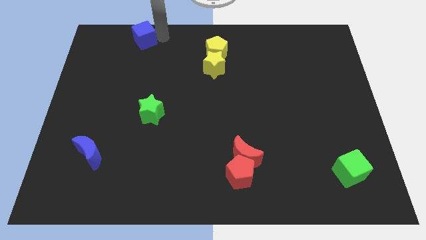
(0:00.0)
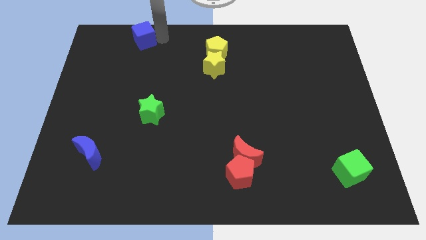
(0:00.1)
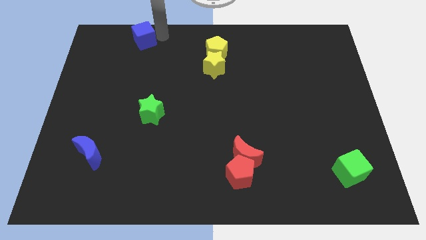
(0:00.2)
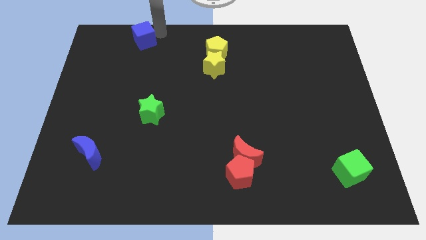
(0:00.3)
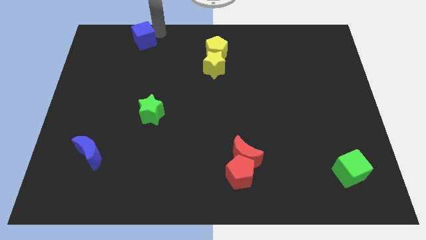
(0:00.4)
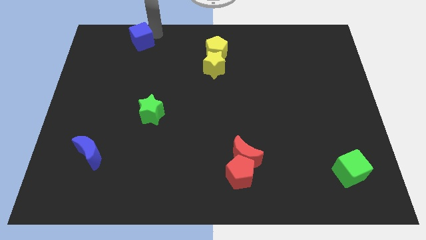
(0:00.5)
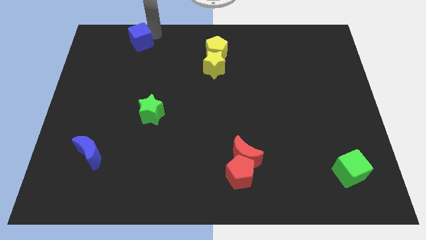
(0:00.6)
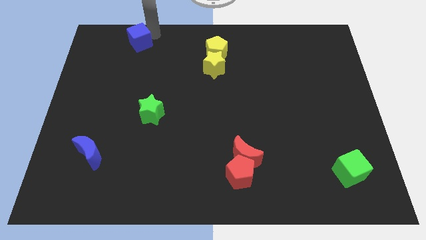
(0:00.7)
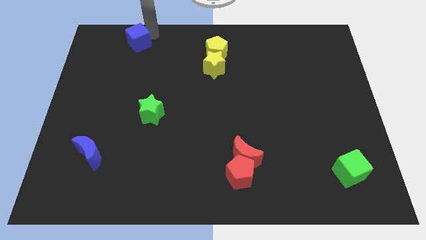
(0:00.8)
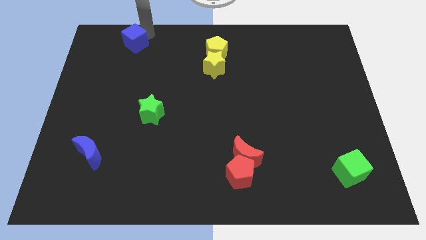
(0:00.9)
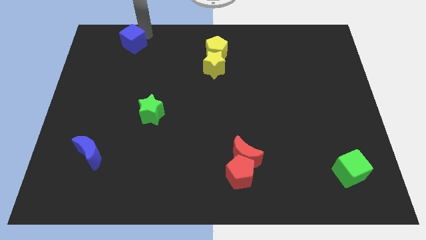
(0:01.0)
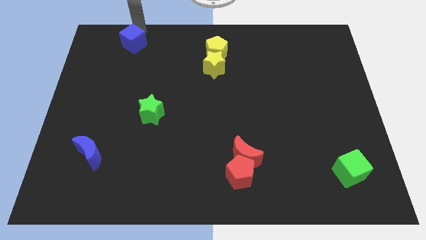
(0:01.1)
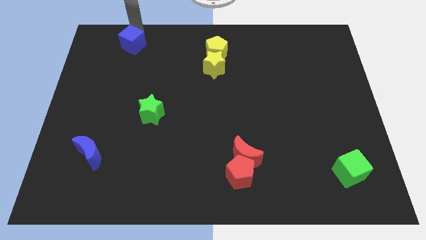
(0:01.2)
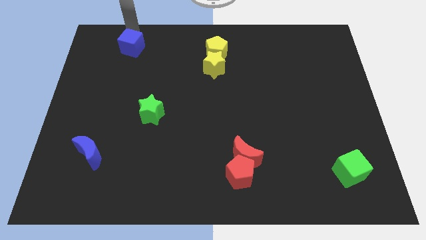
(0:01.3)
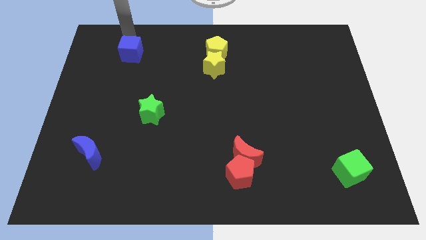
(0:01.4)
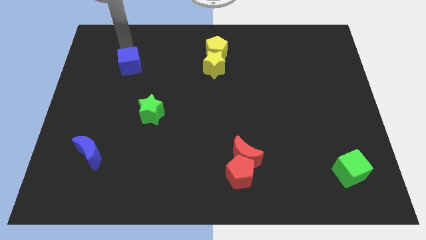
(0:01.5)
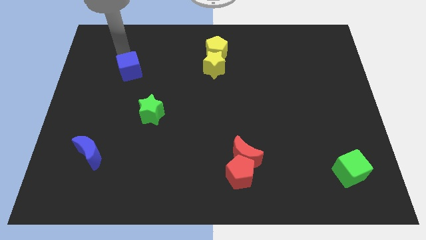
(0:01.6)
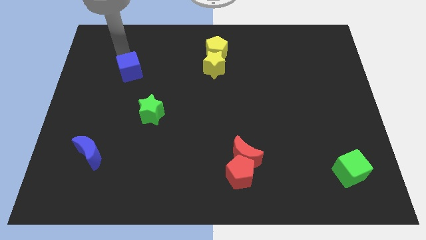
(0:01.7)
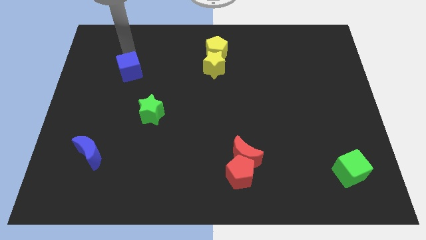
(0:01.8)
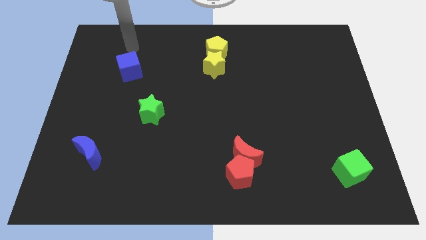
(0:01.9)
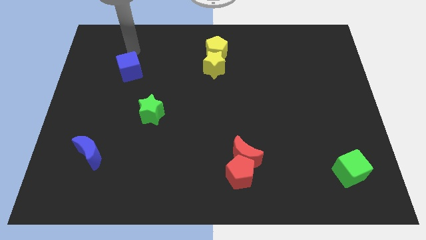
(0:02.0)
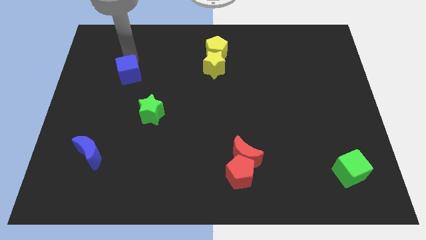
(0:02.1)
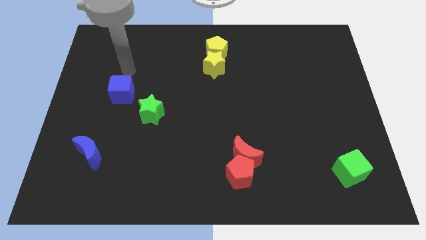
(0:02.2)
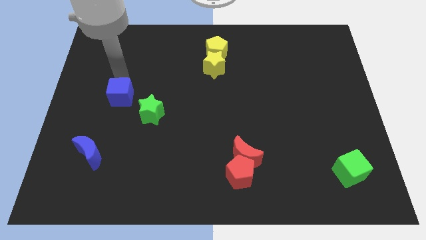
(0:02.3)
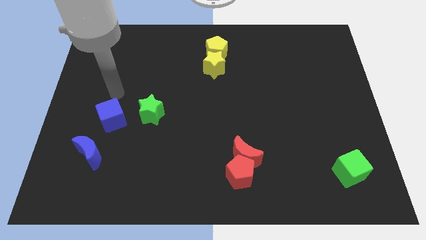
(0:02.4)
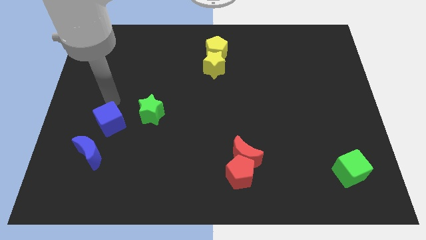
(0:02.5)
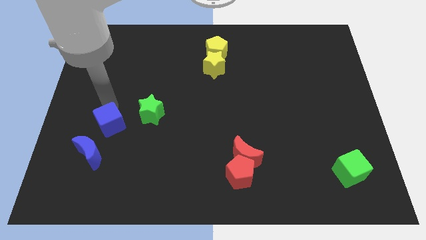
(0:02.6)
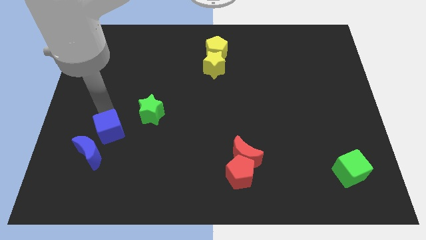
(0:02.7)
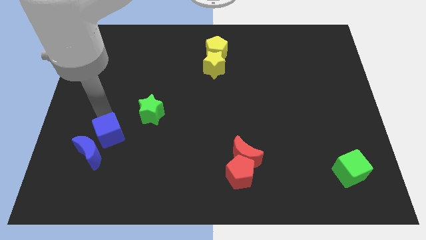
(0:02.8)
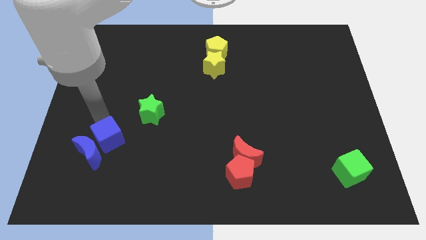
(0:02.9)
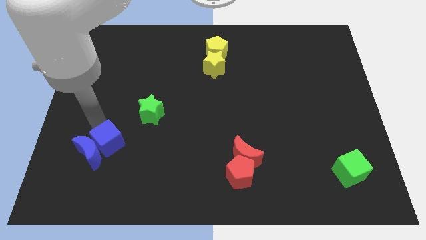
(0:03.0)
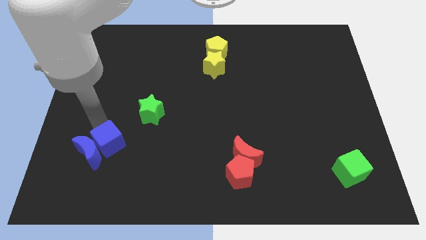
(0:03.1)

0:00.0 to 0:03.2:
move the blue cube close to the blue moon

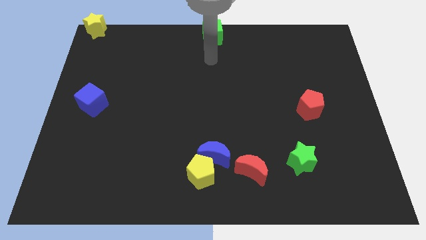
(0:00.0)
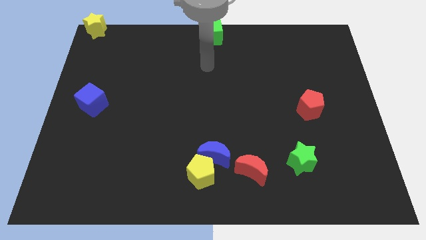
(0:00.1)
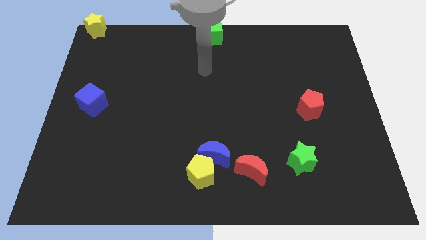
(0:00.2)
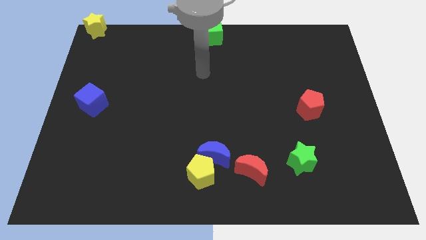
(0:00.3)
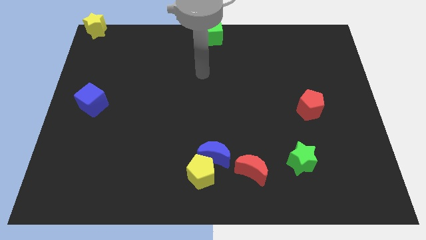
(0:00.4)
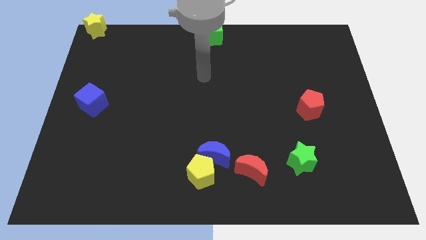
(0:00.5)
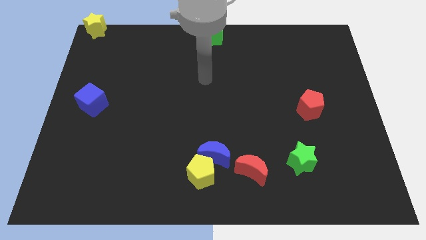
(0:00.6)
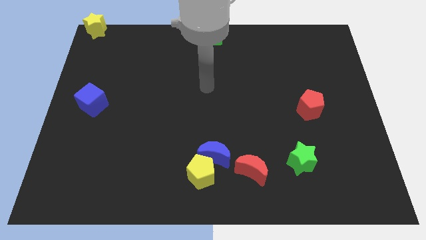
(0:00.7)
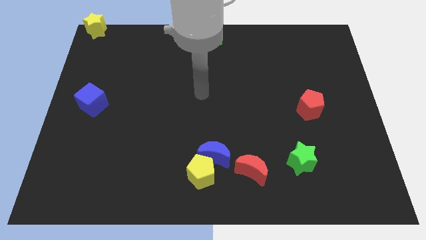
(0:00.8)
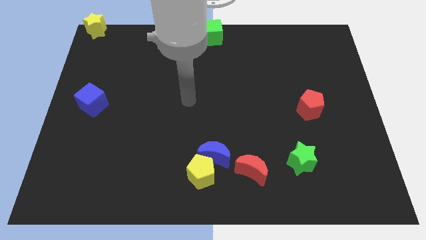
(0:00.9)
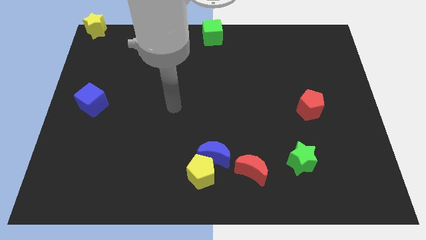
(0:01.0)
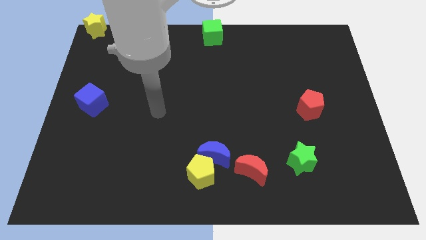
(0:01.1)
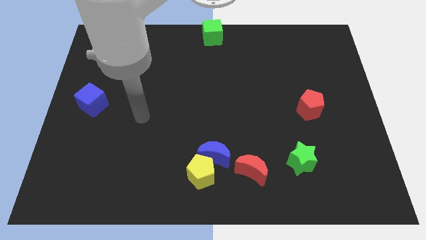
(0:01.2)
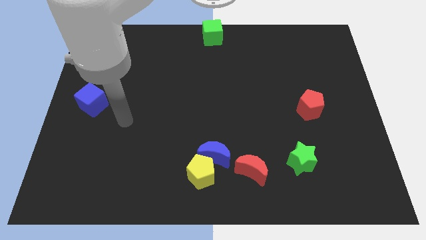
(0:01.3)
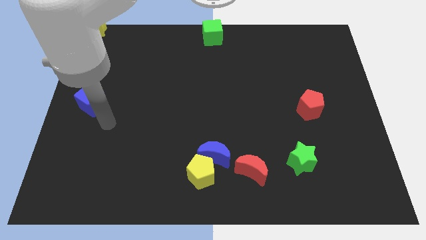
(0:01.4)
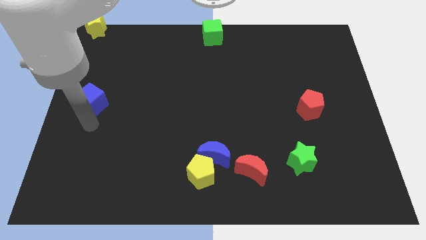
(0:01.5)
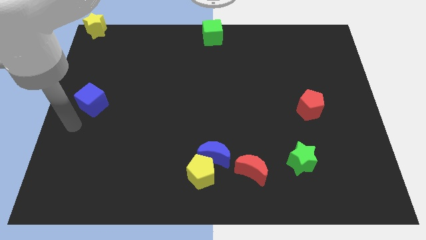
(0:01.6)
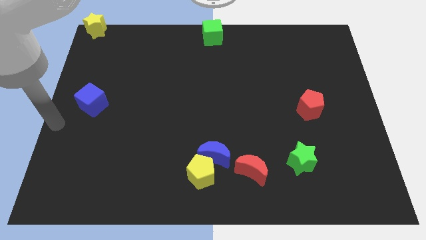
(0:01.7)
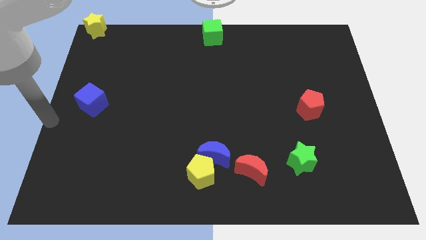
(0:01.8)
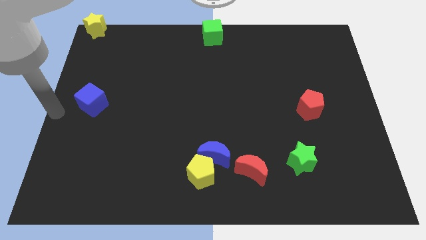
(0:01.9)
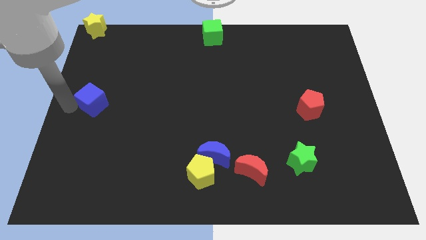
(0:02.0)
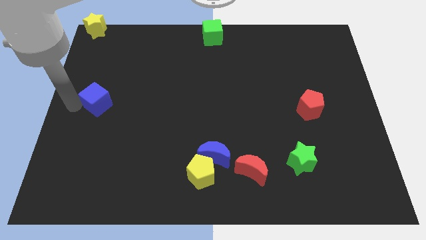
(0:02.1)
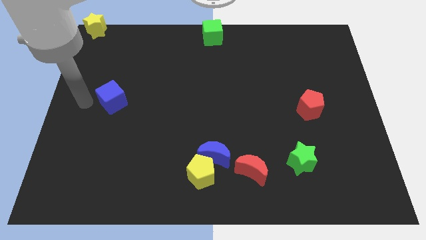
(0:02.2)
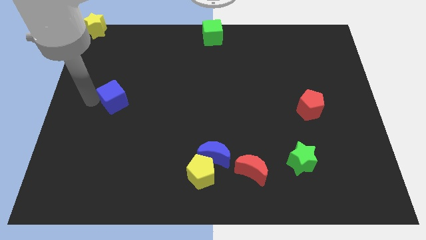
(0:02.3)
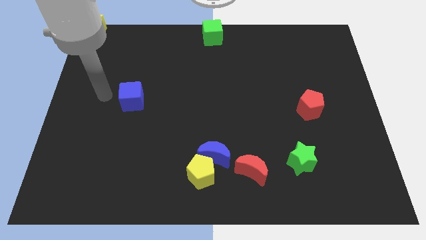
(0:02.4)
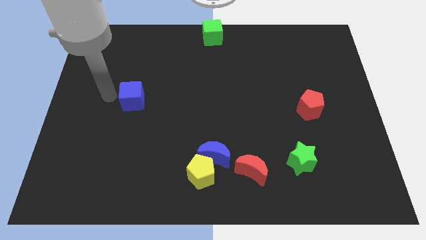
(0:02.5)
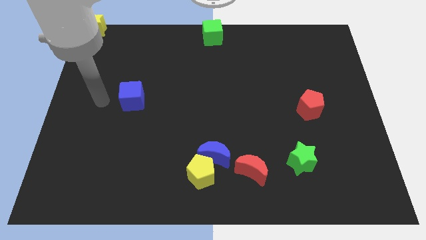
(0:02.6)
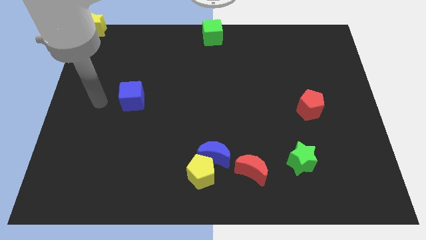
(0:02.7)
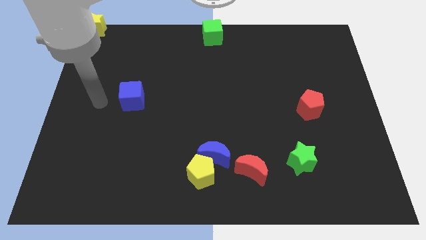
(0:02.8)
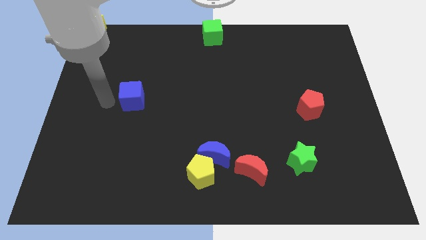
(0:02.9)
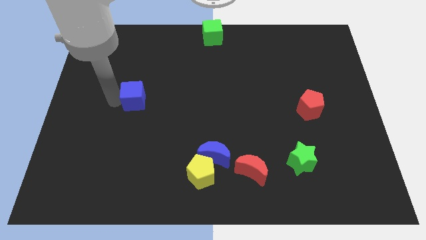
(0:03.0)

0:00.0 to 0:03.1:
slide the blue cube slightly to the right

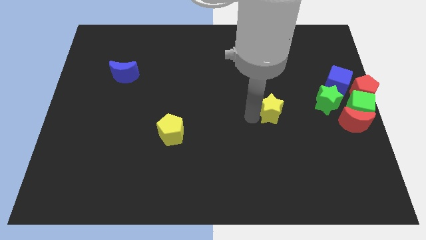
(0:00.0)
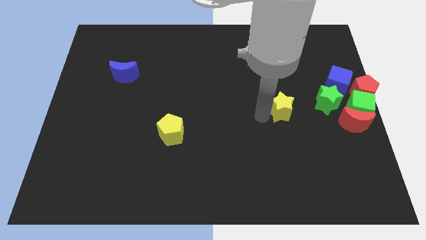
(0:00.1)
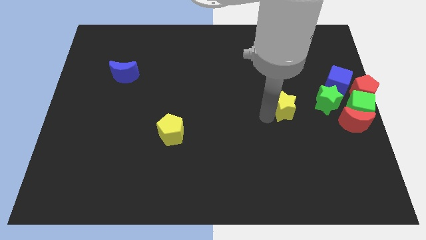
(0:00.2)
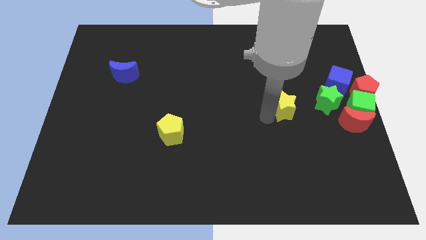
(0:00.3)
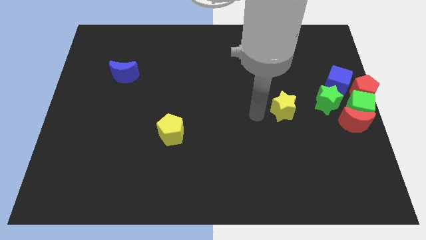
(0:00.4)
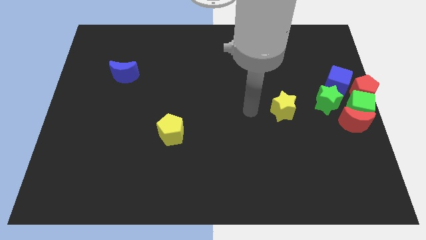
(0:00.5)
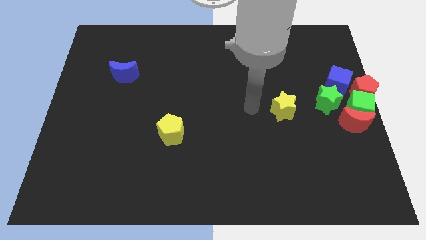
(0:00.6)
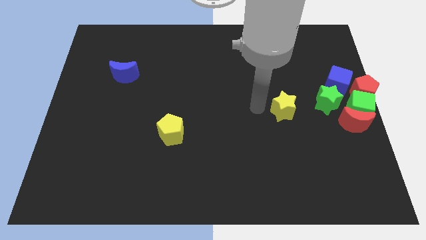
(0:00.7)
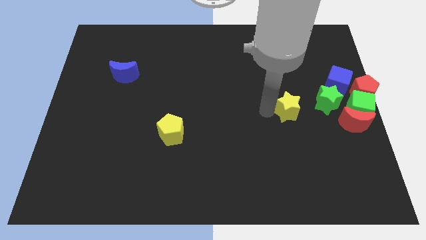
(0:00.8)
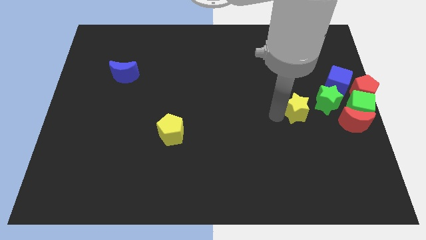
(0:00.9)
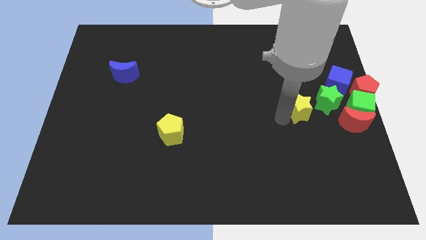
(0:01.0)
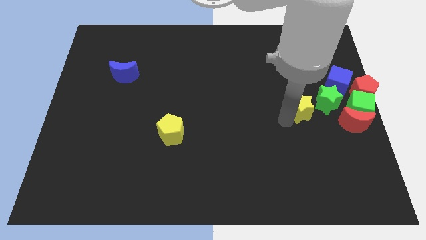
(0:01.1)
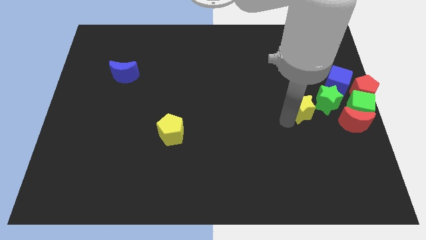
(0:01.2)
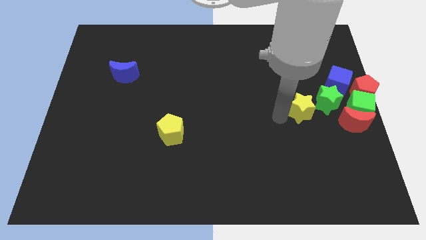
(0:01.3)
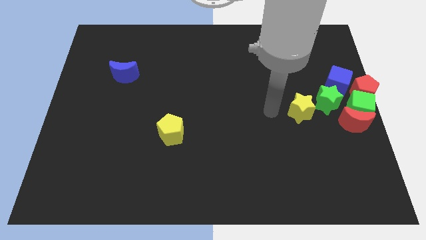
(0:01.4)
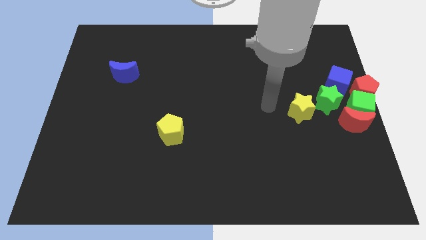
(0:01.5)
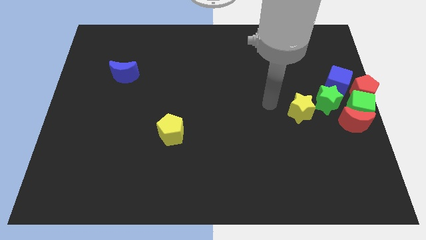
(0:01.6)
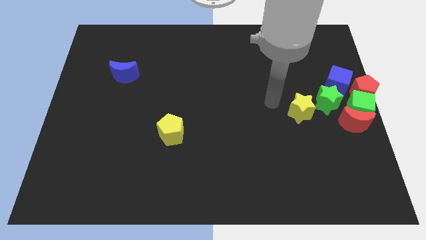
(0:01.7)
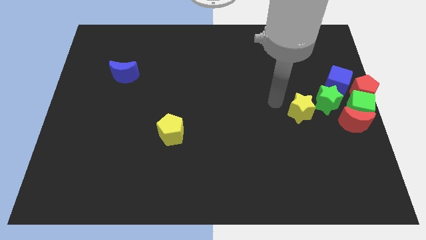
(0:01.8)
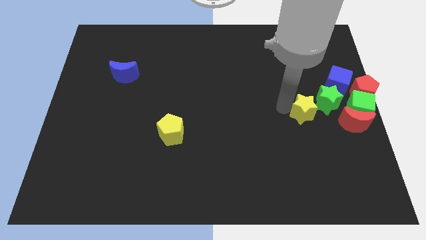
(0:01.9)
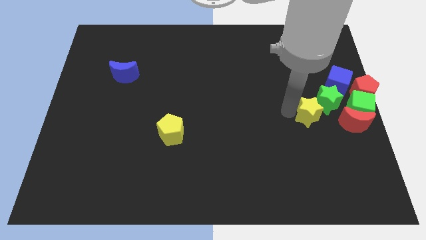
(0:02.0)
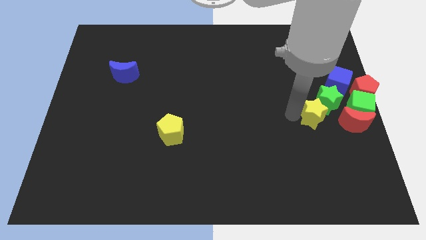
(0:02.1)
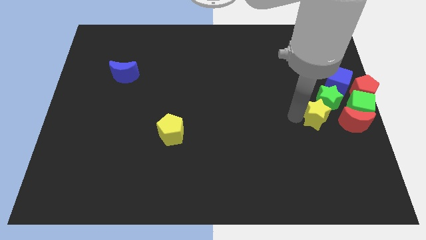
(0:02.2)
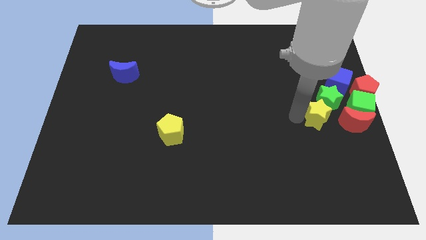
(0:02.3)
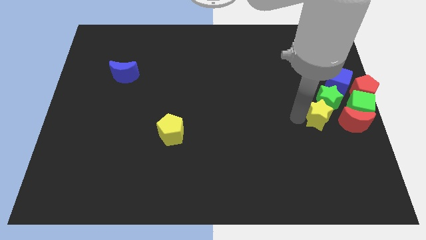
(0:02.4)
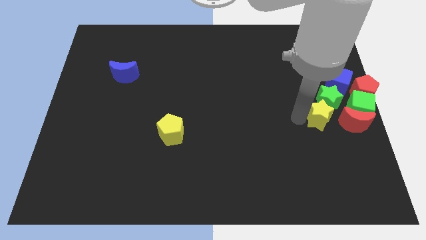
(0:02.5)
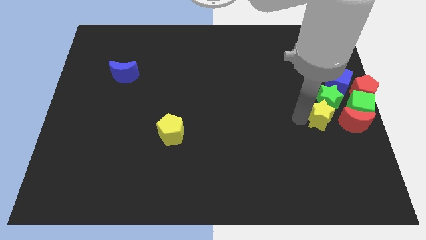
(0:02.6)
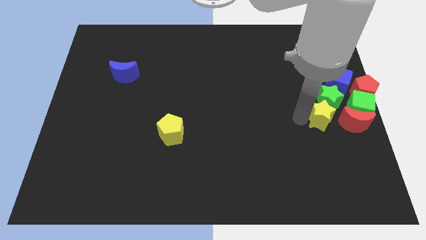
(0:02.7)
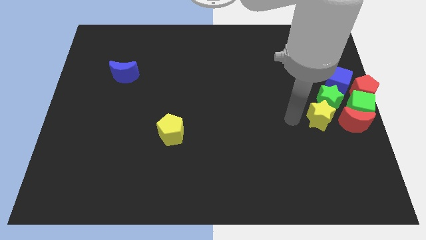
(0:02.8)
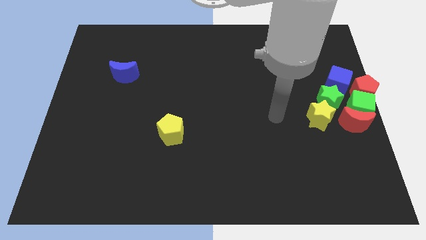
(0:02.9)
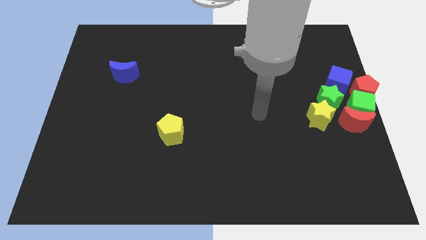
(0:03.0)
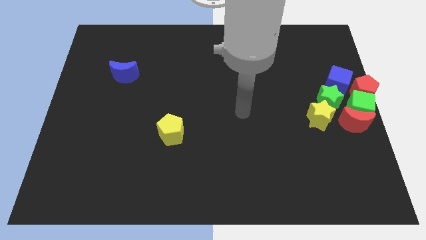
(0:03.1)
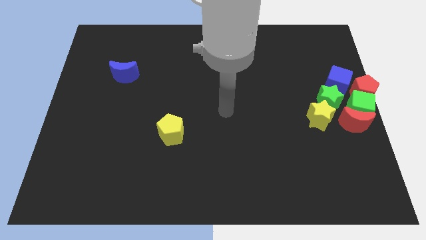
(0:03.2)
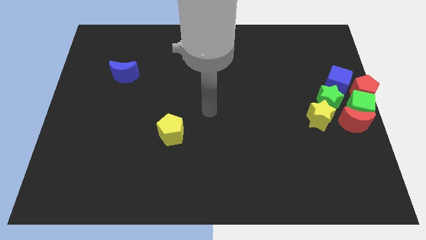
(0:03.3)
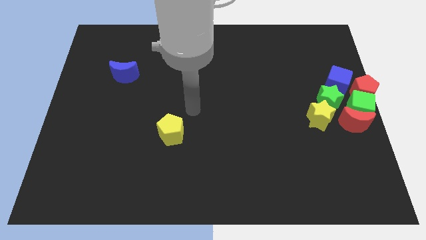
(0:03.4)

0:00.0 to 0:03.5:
move the yellow star diagonally top right to yellow pentagon
